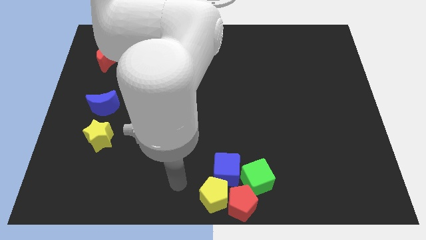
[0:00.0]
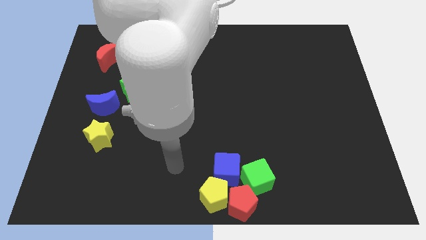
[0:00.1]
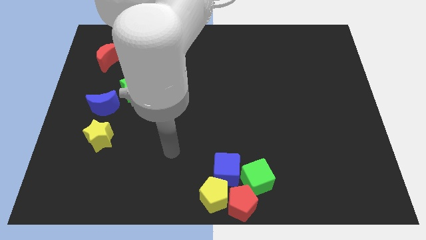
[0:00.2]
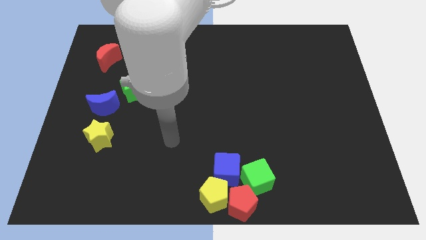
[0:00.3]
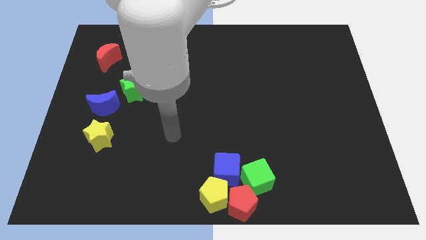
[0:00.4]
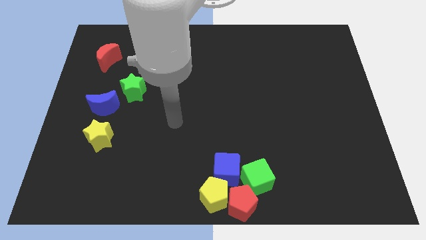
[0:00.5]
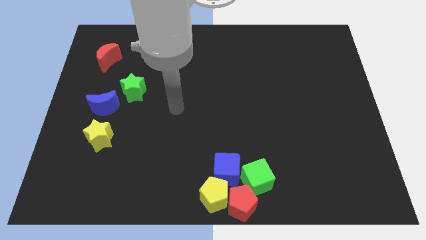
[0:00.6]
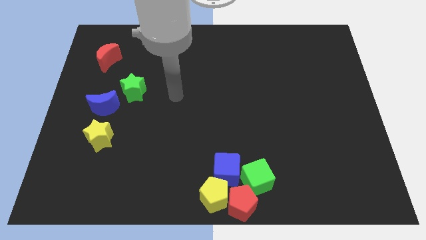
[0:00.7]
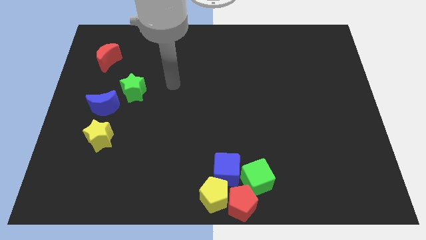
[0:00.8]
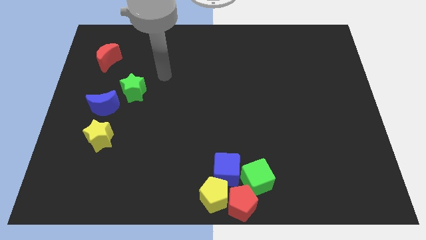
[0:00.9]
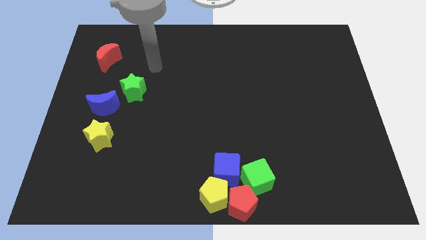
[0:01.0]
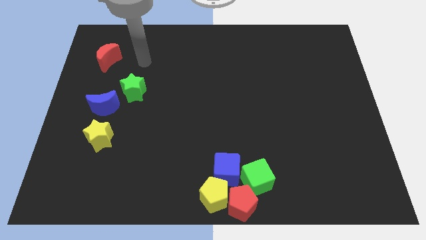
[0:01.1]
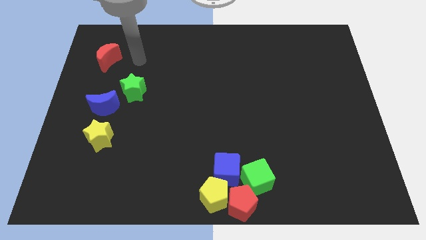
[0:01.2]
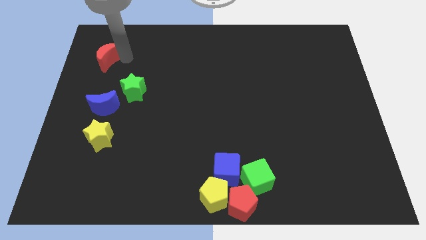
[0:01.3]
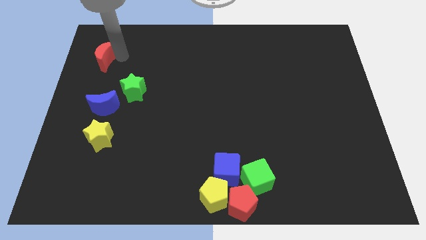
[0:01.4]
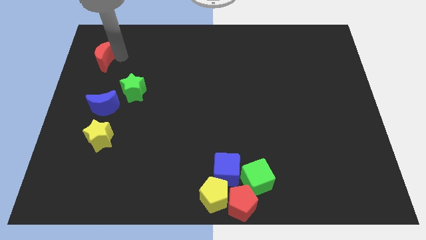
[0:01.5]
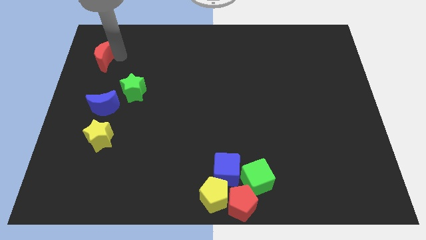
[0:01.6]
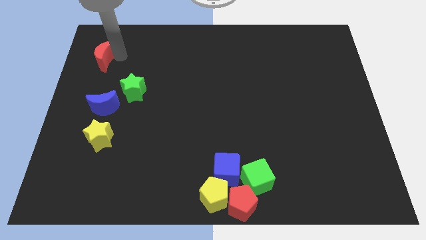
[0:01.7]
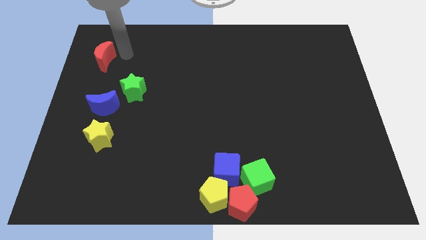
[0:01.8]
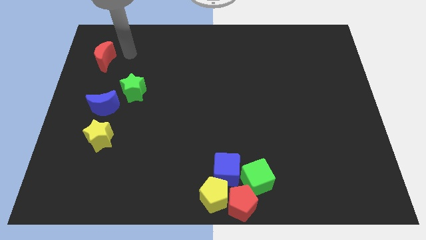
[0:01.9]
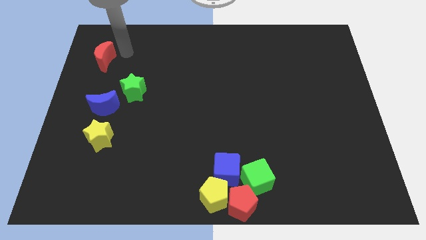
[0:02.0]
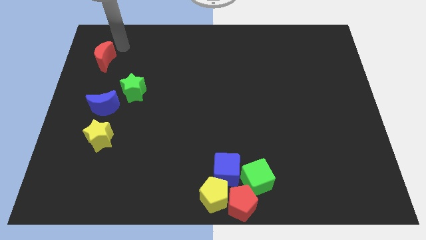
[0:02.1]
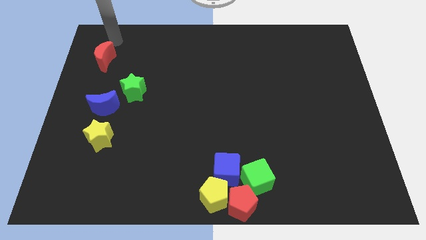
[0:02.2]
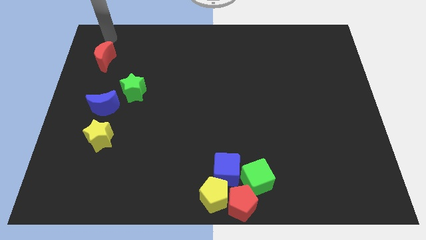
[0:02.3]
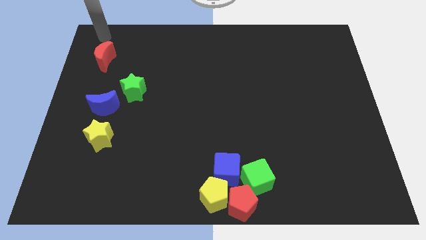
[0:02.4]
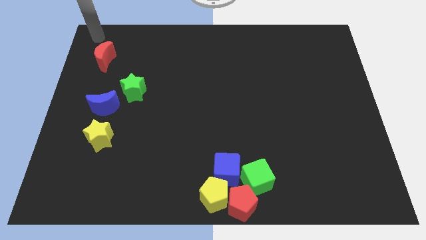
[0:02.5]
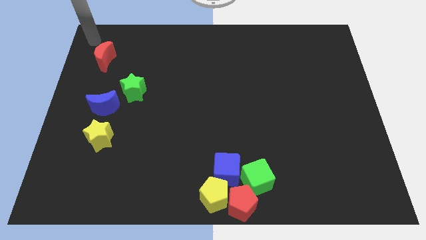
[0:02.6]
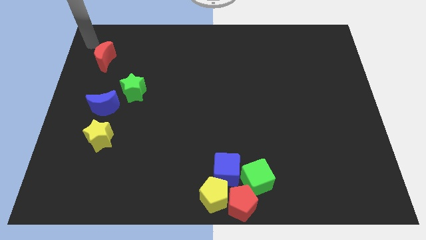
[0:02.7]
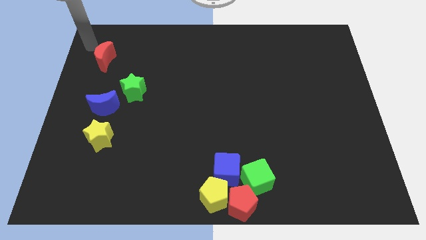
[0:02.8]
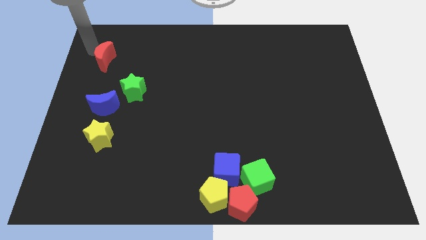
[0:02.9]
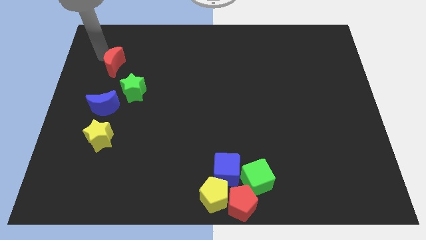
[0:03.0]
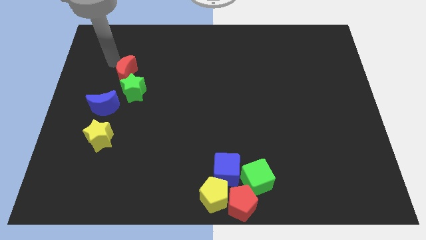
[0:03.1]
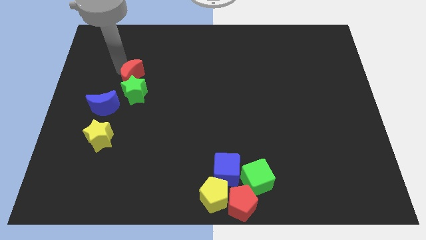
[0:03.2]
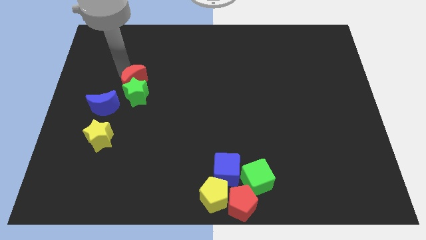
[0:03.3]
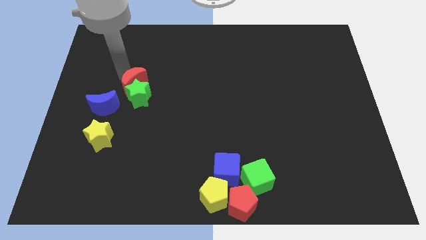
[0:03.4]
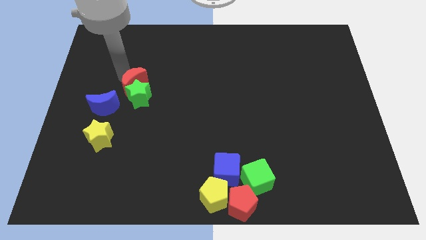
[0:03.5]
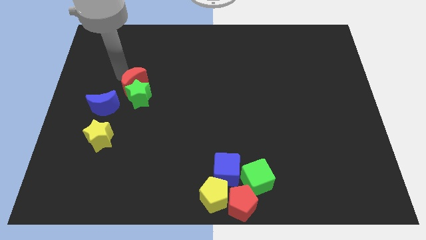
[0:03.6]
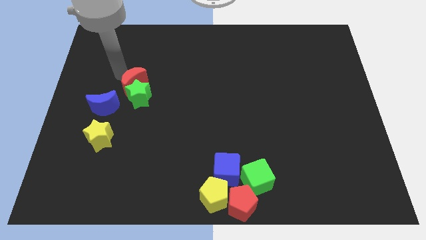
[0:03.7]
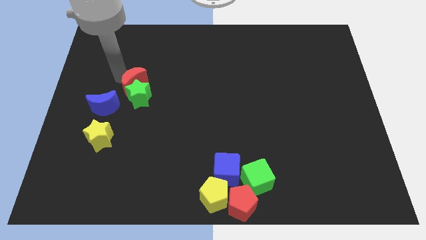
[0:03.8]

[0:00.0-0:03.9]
move red crescent into top of green star

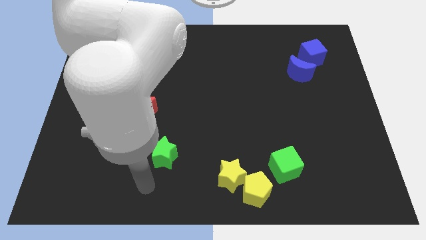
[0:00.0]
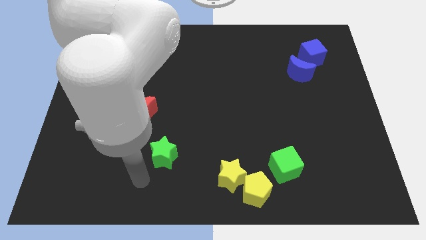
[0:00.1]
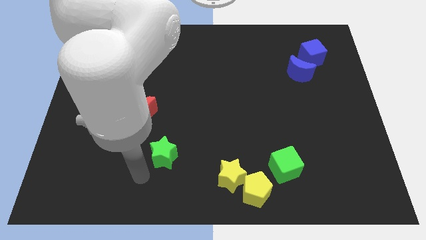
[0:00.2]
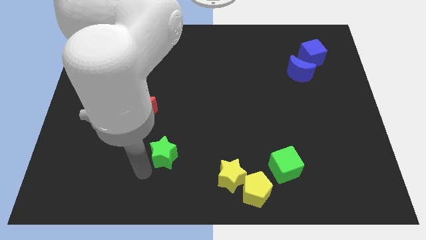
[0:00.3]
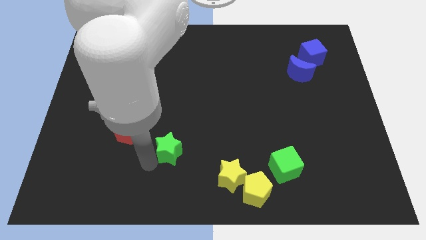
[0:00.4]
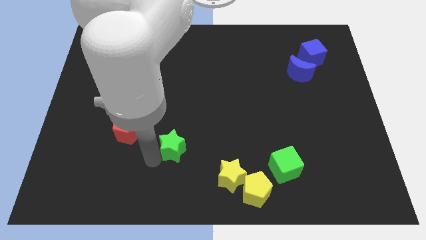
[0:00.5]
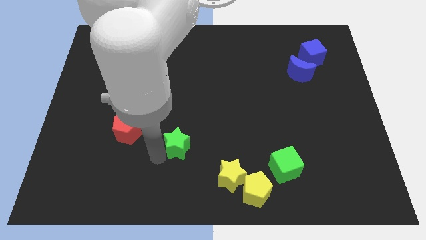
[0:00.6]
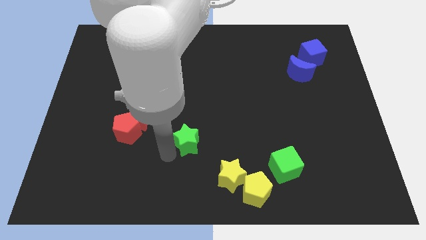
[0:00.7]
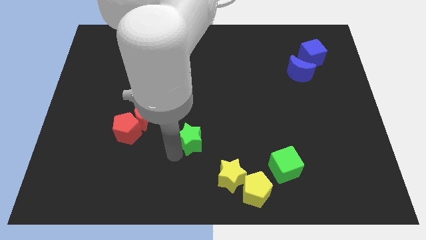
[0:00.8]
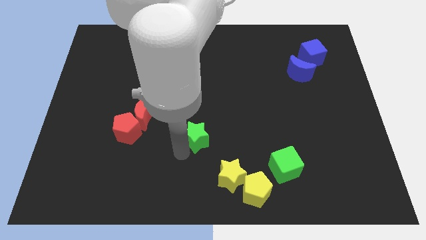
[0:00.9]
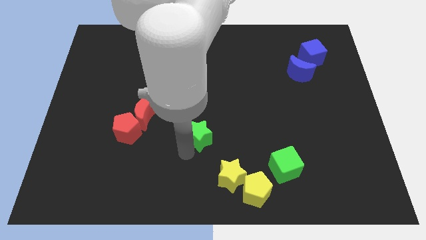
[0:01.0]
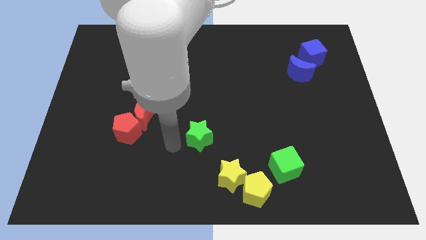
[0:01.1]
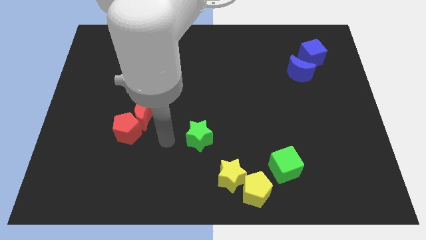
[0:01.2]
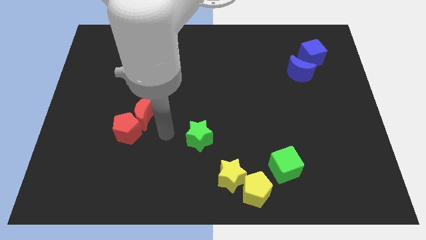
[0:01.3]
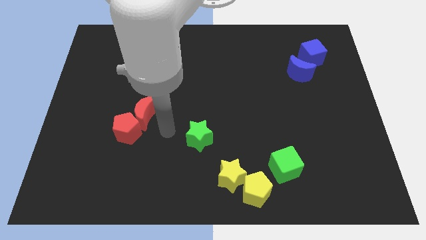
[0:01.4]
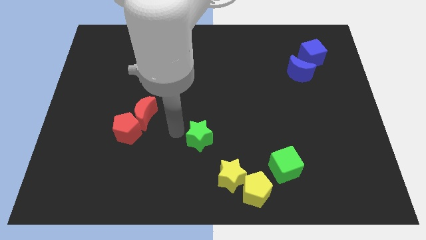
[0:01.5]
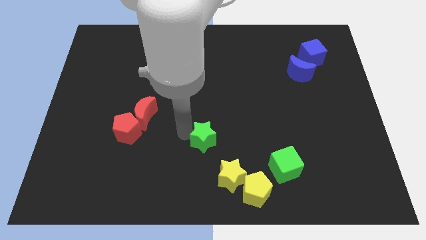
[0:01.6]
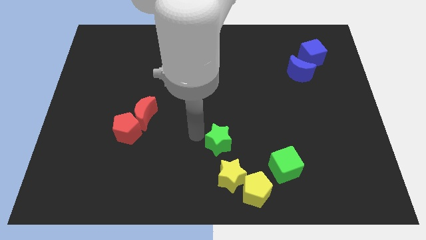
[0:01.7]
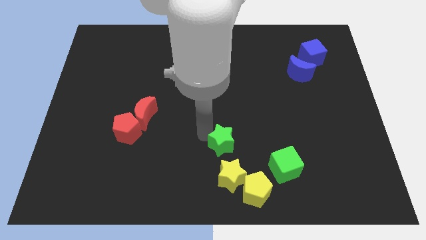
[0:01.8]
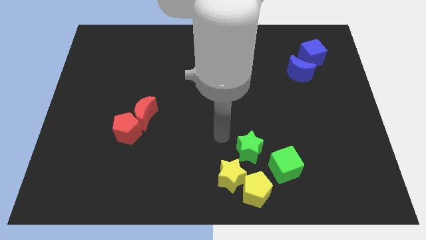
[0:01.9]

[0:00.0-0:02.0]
put the green star above the yellow pentagon

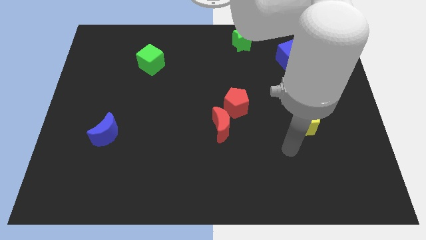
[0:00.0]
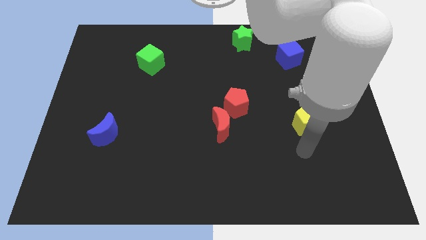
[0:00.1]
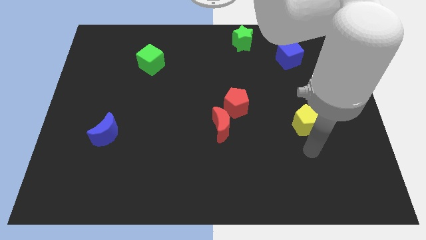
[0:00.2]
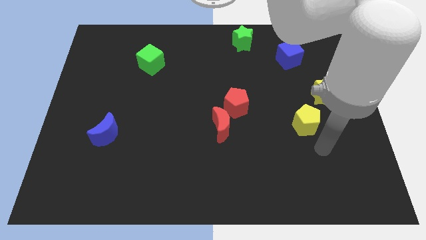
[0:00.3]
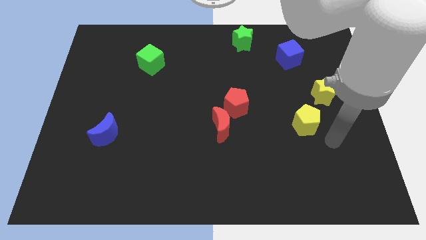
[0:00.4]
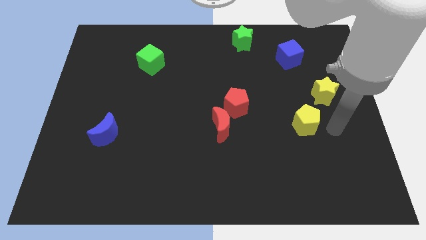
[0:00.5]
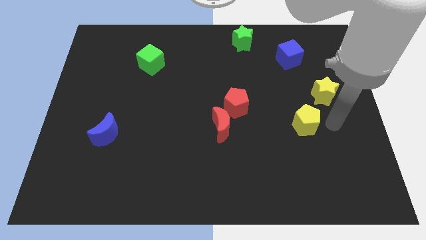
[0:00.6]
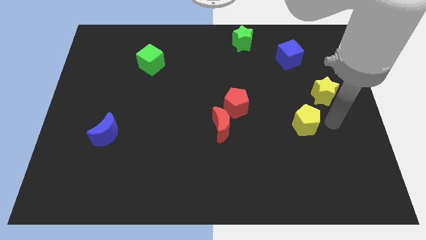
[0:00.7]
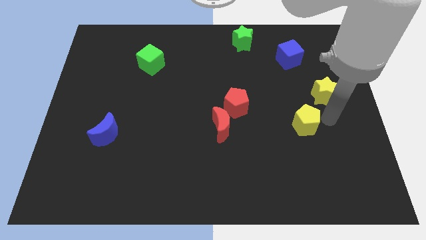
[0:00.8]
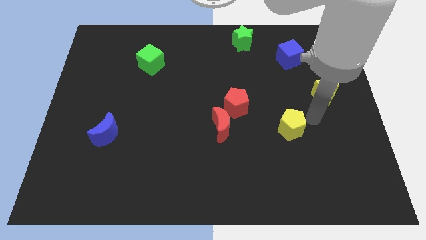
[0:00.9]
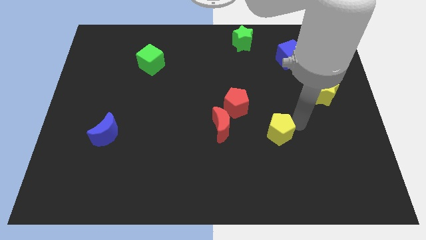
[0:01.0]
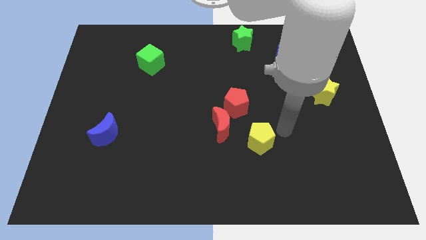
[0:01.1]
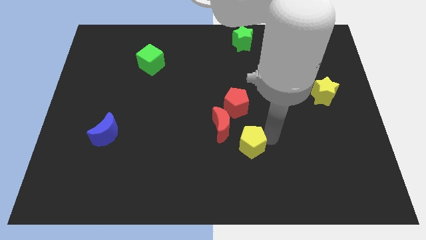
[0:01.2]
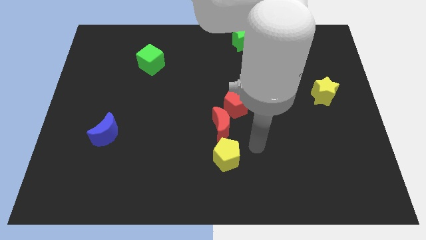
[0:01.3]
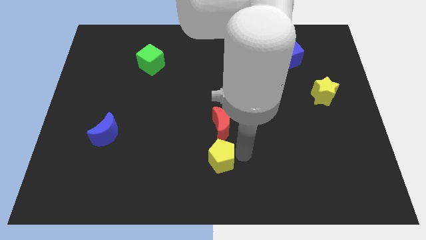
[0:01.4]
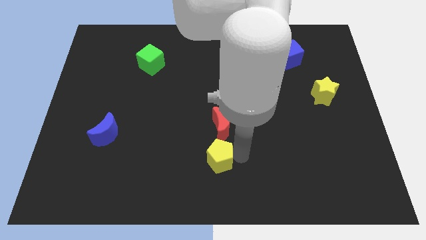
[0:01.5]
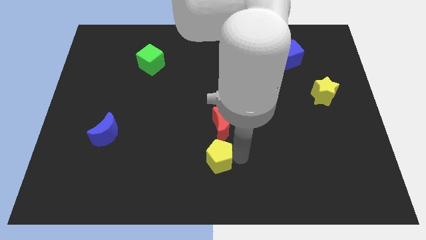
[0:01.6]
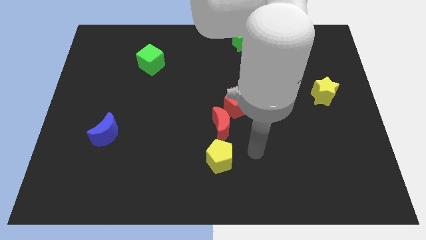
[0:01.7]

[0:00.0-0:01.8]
place the yellow pentagon below the red crescent

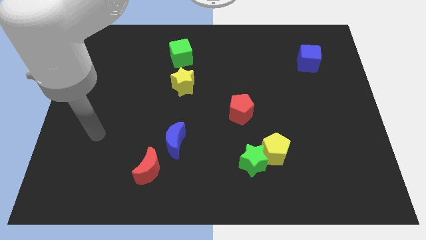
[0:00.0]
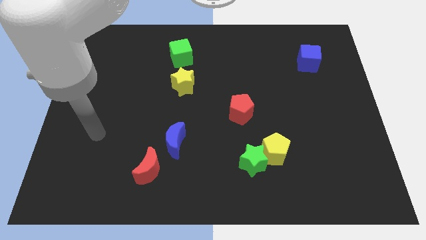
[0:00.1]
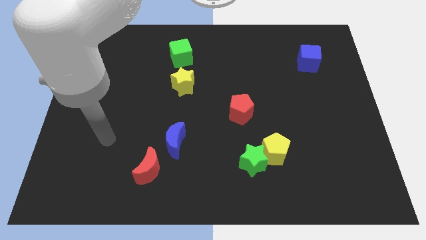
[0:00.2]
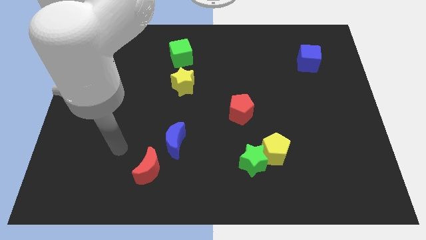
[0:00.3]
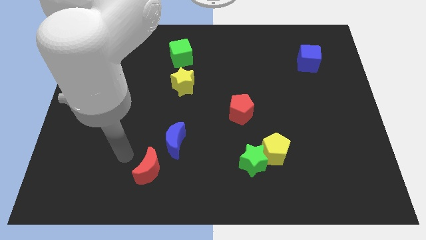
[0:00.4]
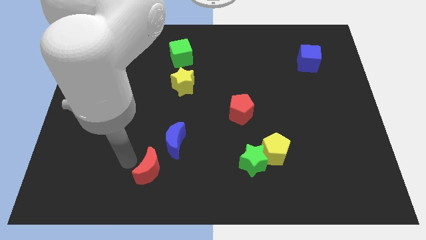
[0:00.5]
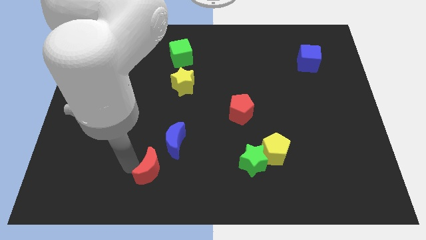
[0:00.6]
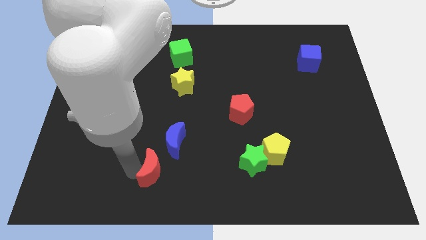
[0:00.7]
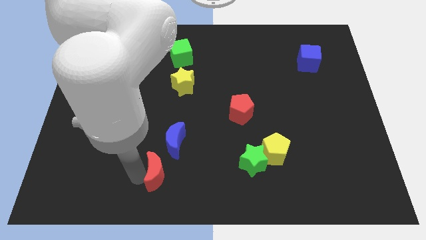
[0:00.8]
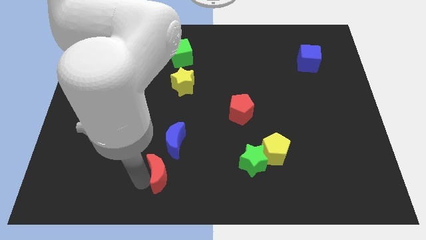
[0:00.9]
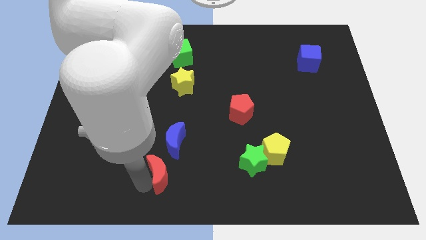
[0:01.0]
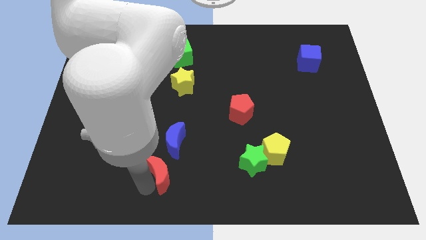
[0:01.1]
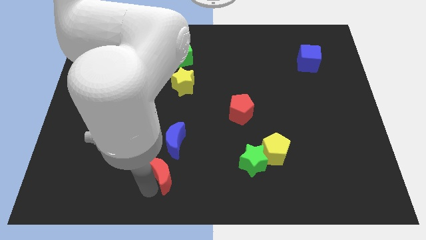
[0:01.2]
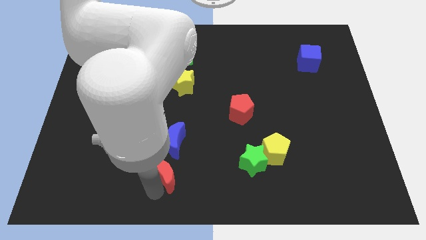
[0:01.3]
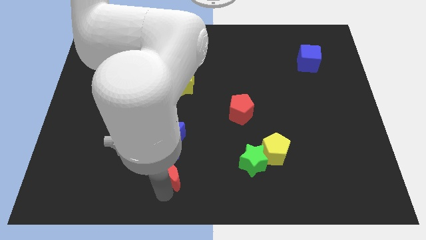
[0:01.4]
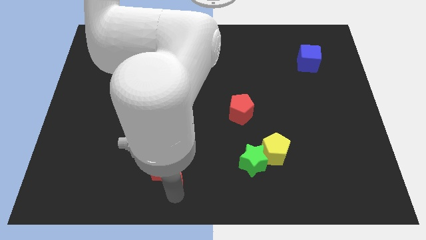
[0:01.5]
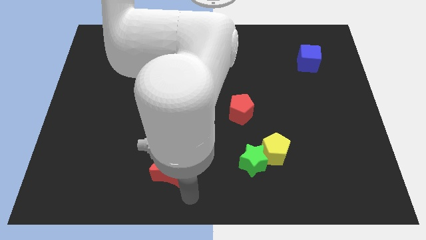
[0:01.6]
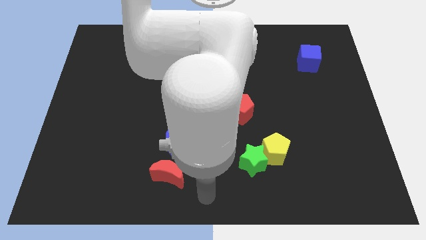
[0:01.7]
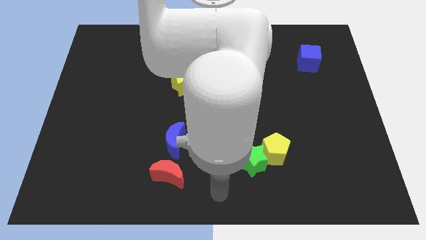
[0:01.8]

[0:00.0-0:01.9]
slightly push the red moon below the blue moon
